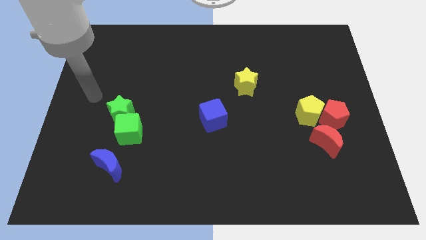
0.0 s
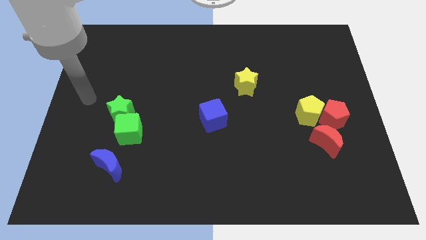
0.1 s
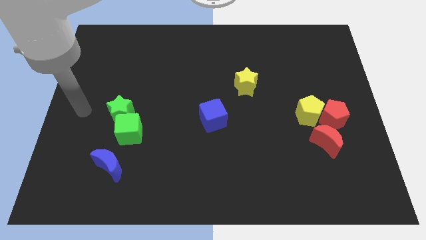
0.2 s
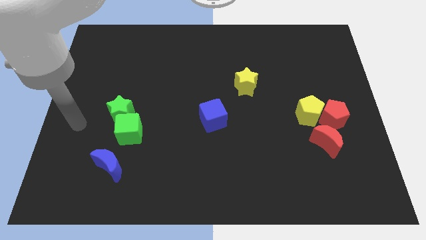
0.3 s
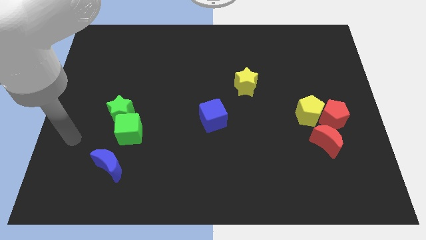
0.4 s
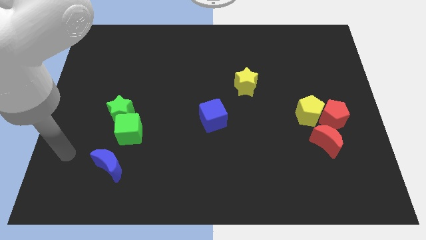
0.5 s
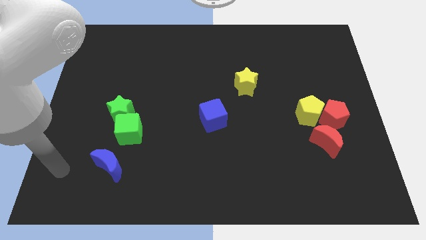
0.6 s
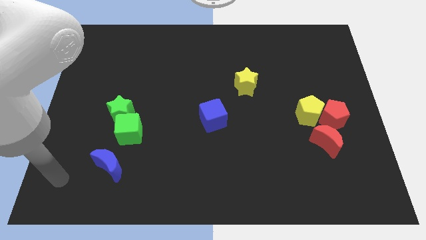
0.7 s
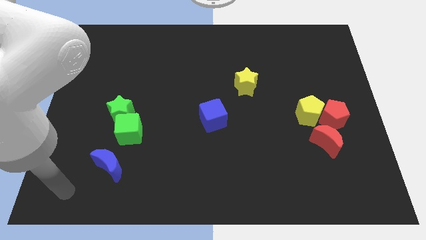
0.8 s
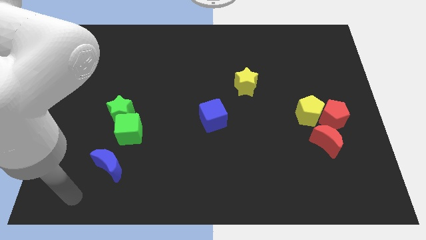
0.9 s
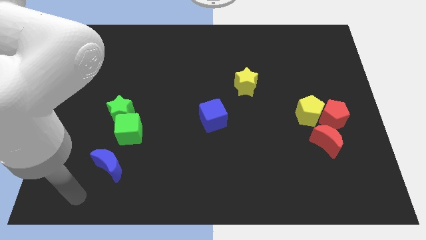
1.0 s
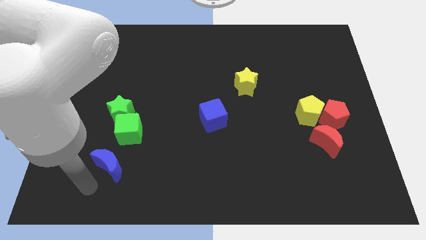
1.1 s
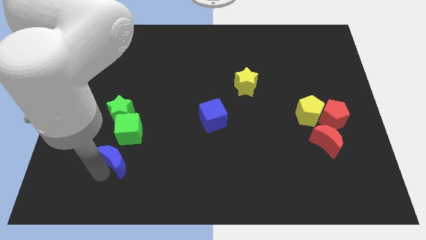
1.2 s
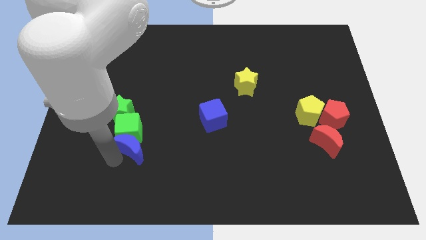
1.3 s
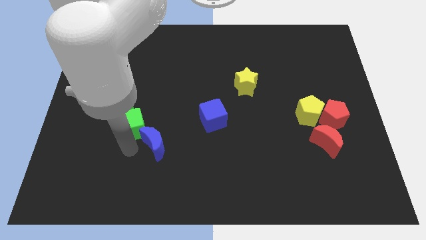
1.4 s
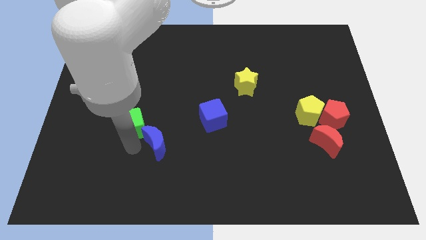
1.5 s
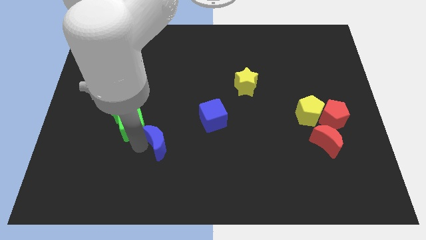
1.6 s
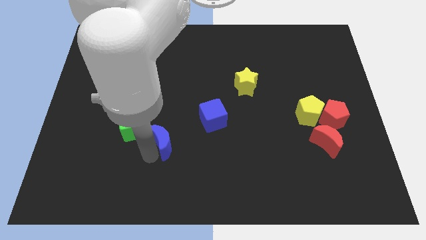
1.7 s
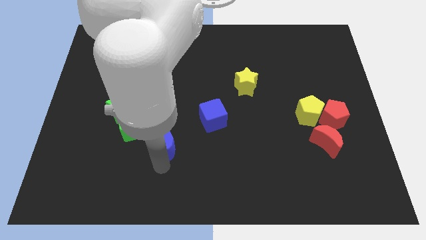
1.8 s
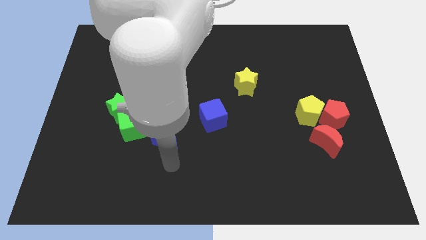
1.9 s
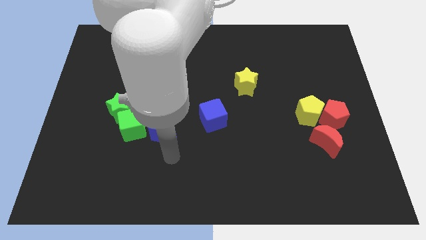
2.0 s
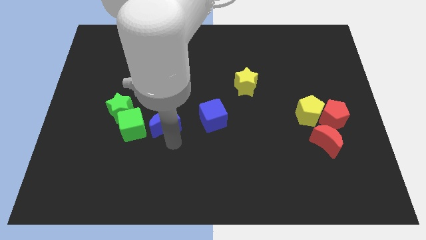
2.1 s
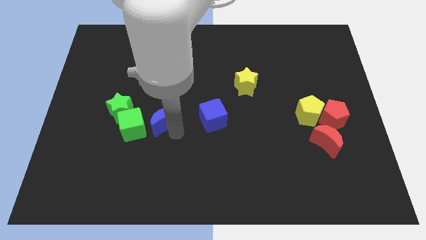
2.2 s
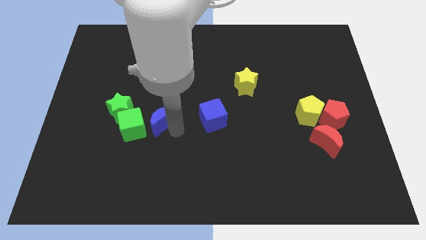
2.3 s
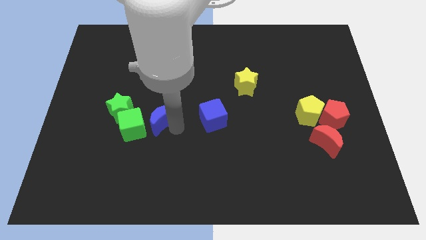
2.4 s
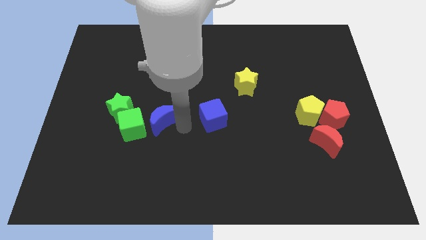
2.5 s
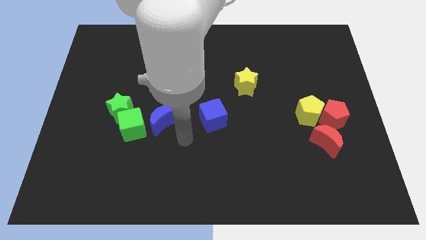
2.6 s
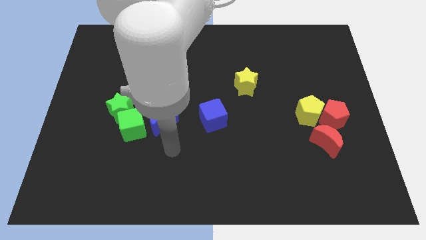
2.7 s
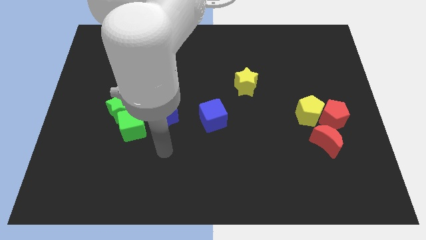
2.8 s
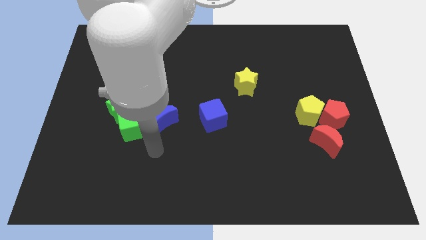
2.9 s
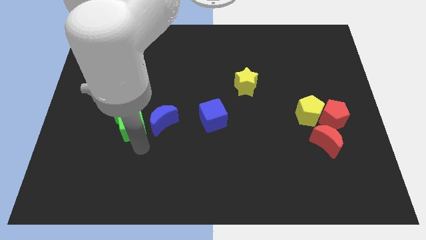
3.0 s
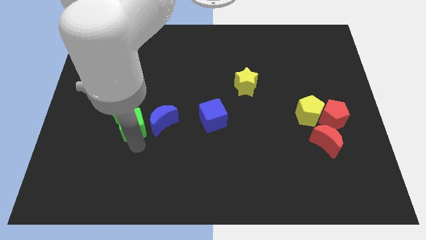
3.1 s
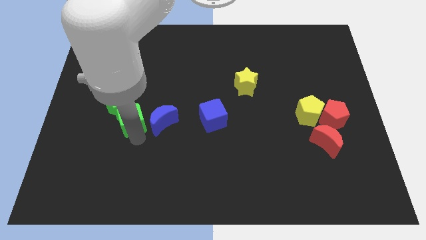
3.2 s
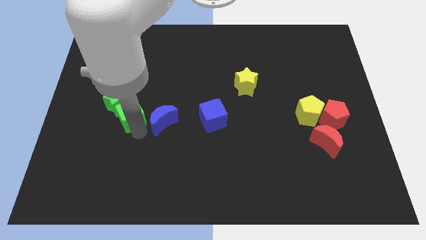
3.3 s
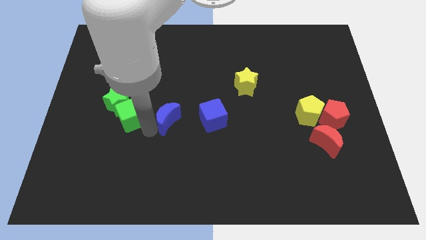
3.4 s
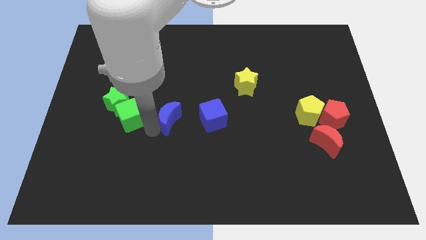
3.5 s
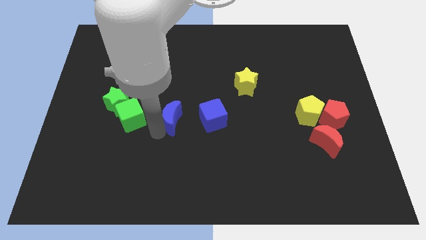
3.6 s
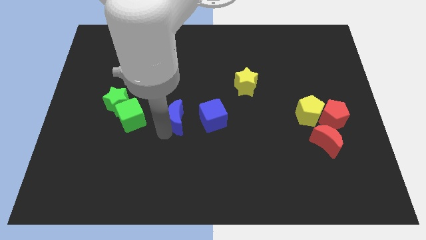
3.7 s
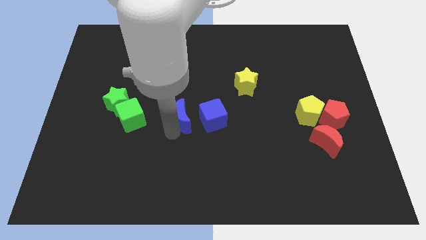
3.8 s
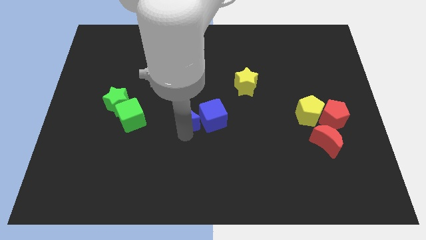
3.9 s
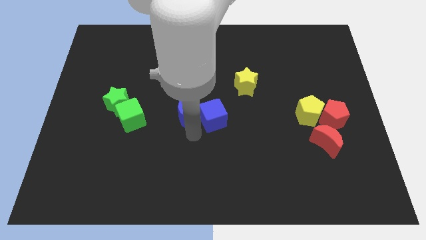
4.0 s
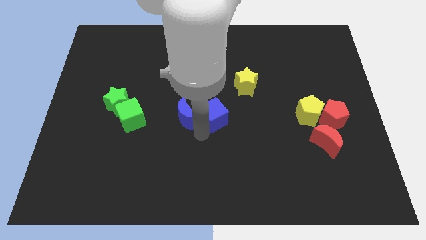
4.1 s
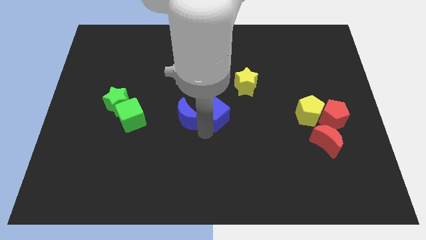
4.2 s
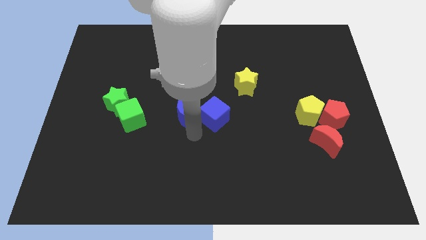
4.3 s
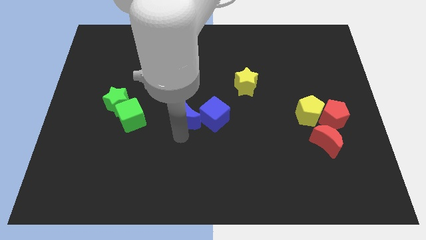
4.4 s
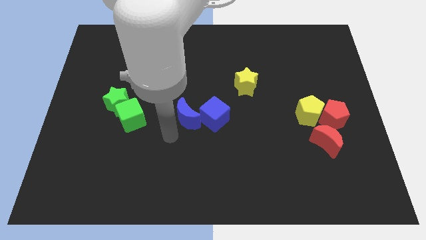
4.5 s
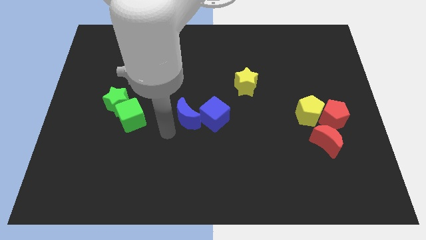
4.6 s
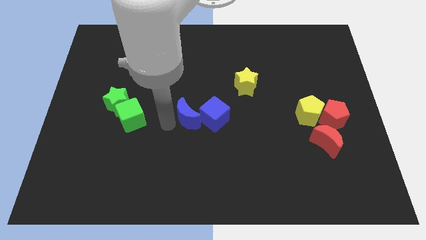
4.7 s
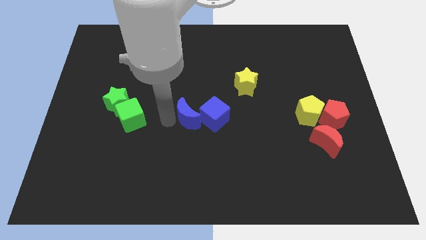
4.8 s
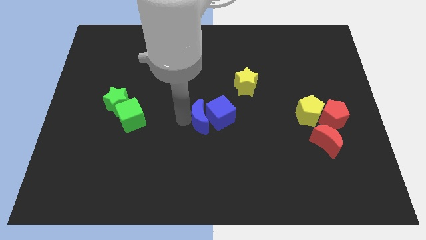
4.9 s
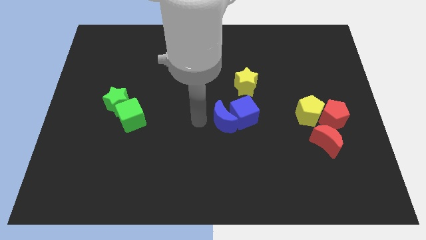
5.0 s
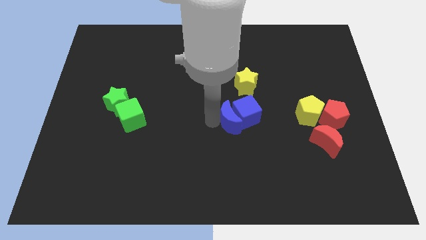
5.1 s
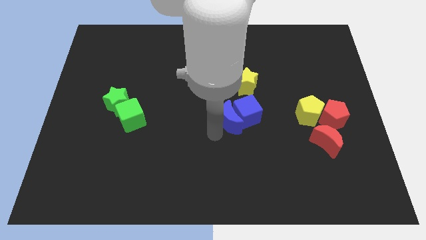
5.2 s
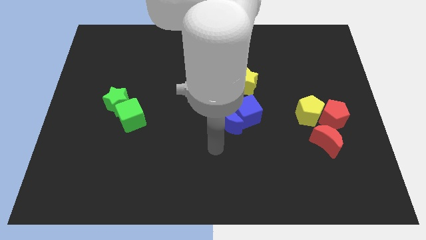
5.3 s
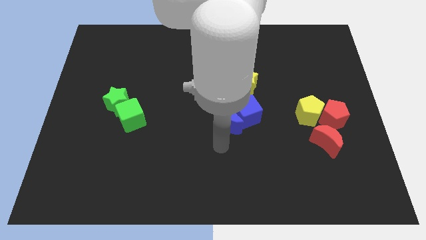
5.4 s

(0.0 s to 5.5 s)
move the blue crescent to the left side of the blue cube

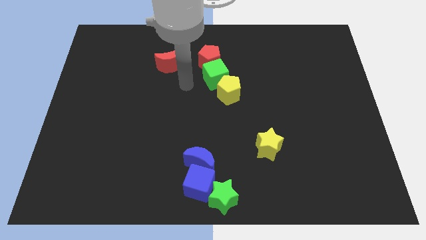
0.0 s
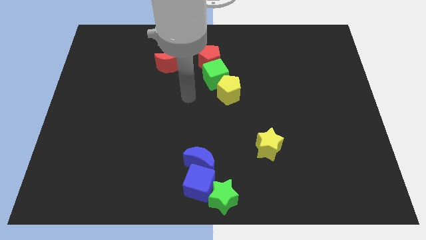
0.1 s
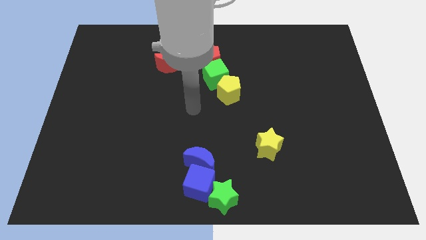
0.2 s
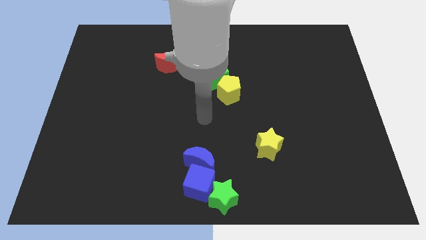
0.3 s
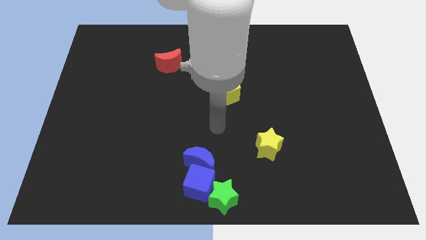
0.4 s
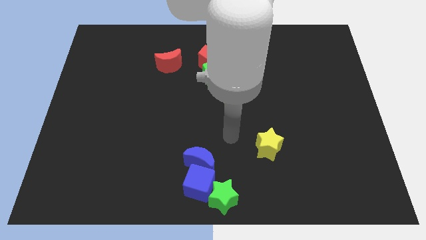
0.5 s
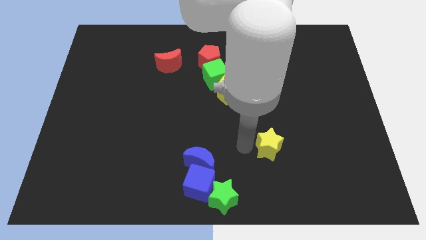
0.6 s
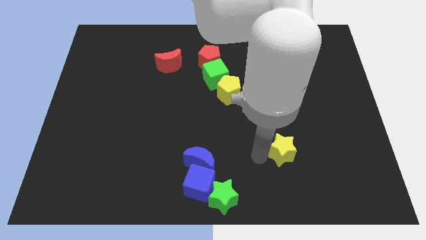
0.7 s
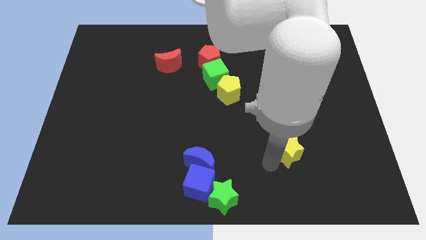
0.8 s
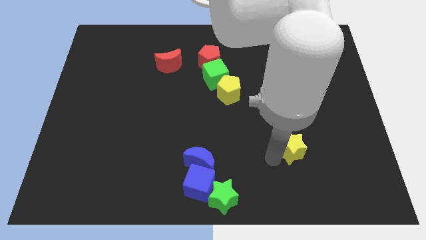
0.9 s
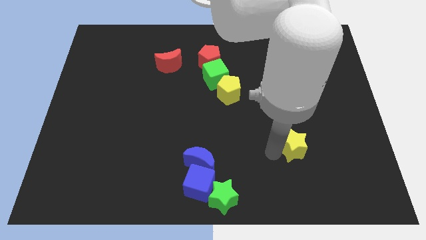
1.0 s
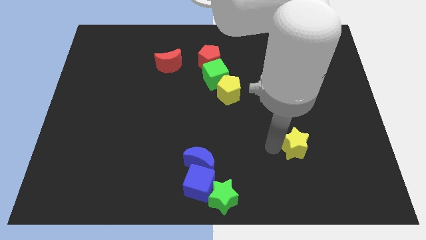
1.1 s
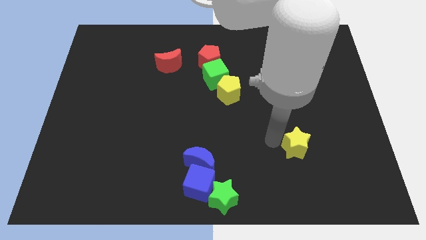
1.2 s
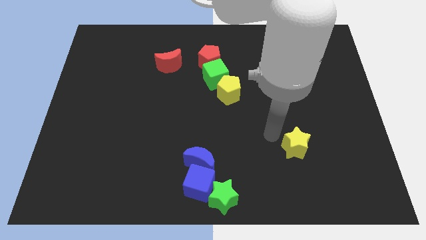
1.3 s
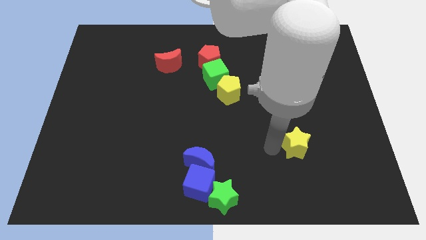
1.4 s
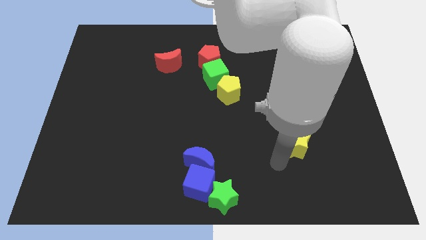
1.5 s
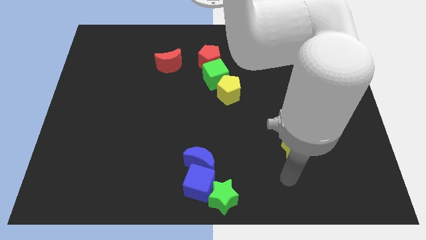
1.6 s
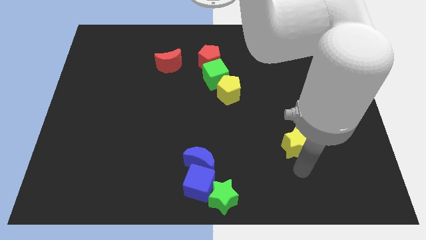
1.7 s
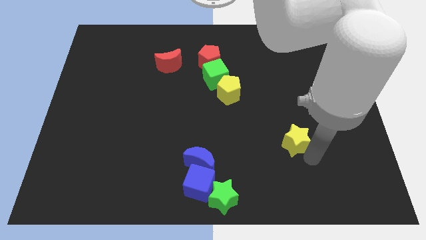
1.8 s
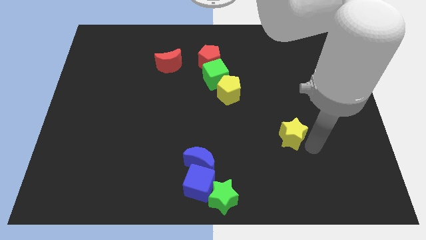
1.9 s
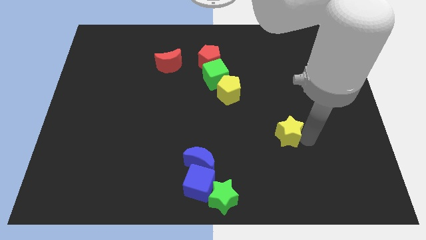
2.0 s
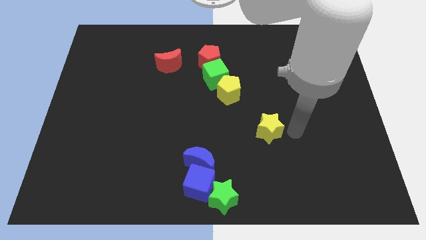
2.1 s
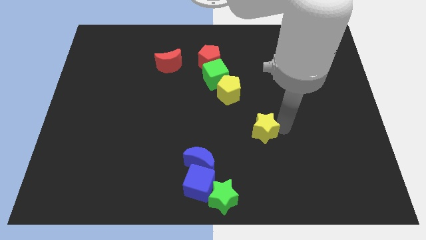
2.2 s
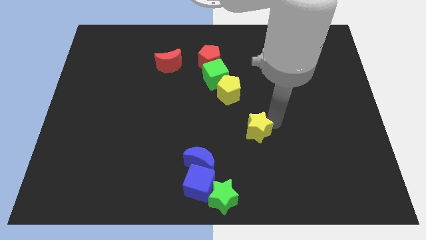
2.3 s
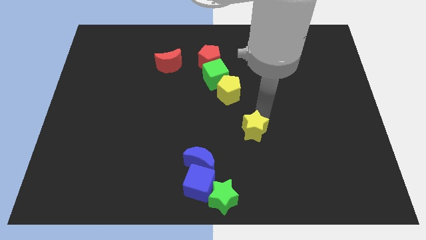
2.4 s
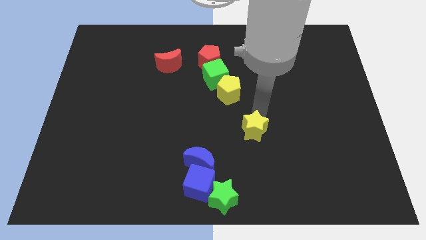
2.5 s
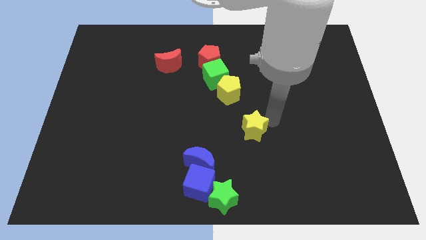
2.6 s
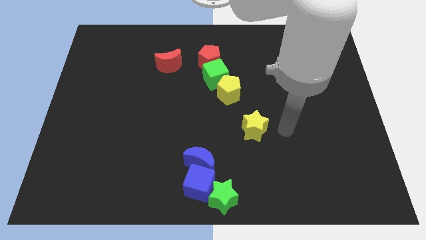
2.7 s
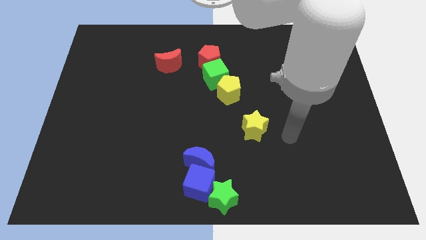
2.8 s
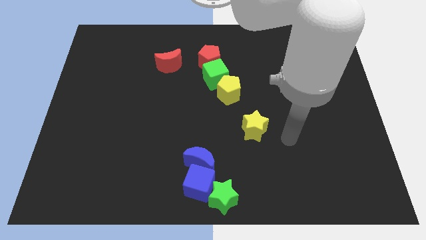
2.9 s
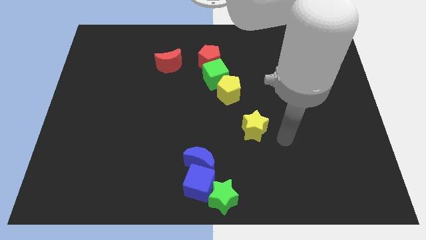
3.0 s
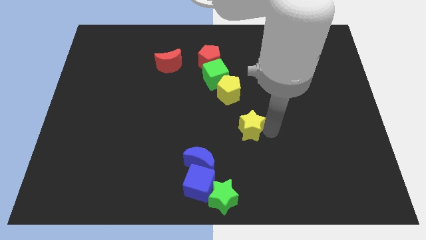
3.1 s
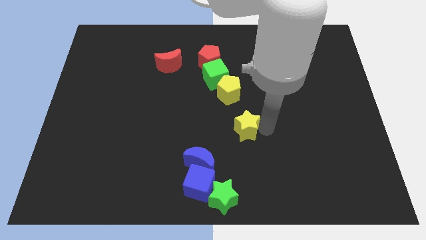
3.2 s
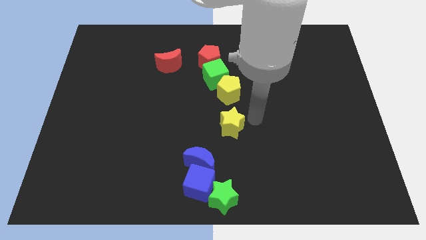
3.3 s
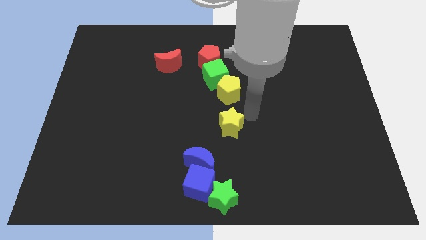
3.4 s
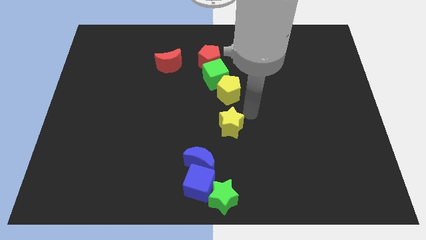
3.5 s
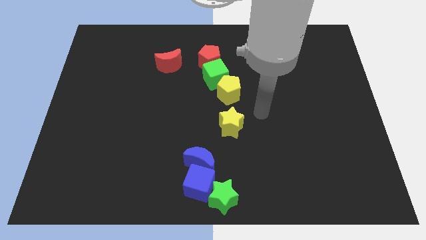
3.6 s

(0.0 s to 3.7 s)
put the yellow star below the yellow pentagon
